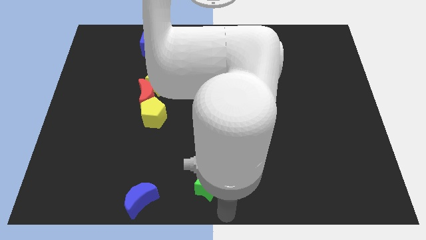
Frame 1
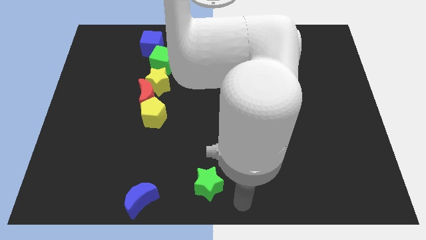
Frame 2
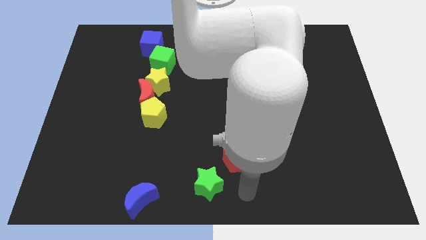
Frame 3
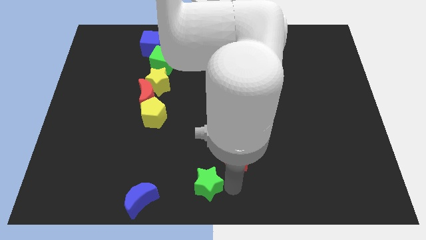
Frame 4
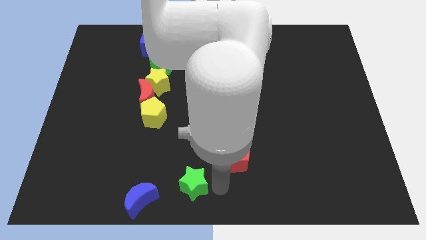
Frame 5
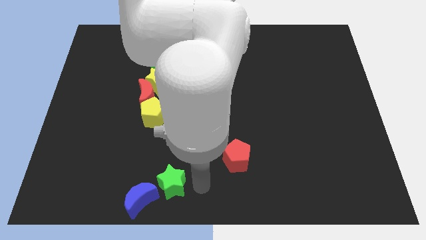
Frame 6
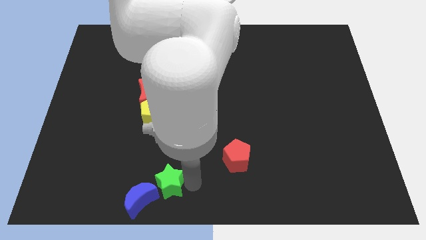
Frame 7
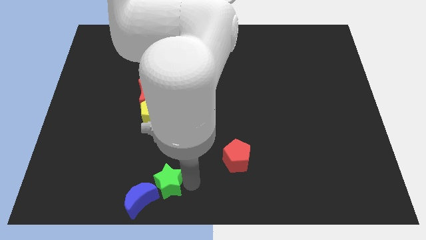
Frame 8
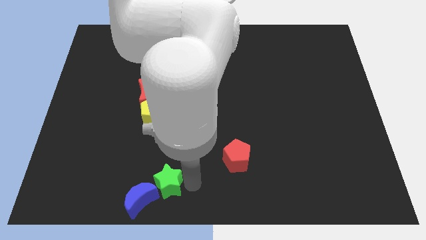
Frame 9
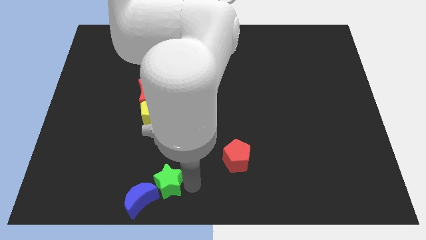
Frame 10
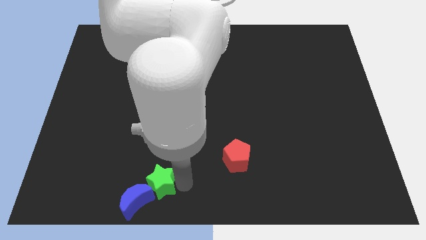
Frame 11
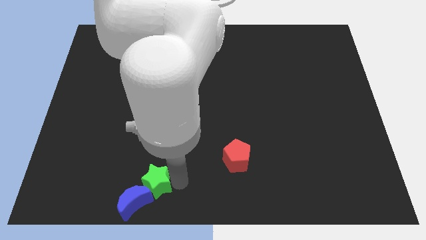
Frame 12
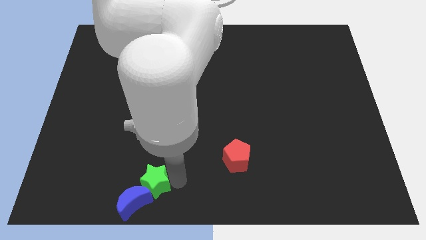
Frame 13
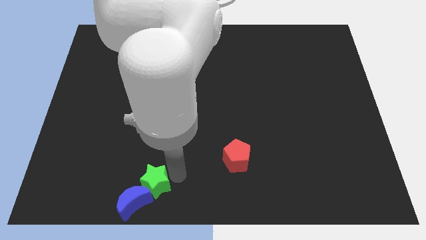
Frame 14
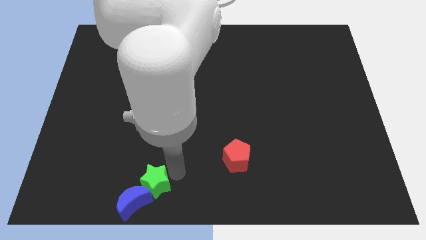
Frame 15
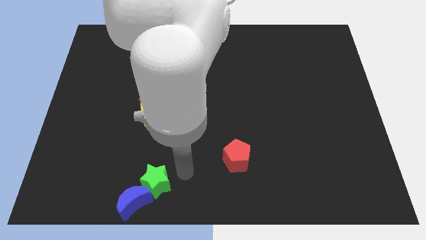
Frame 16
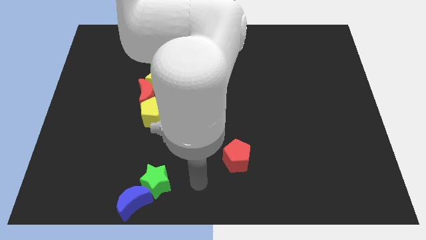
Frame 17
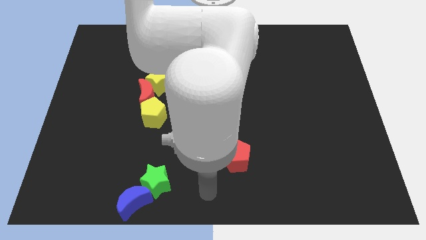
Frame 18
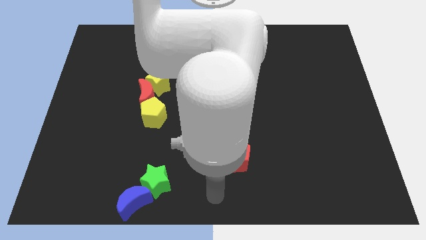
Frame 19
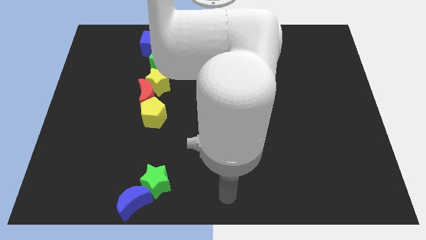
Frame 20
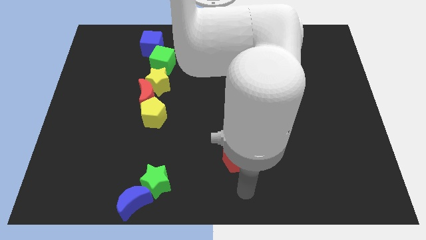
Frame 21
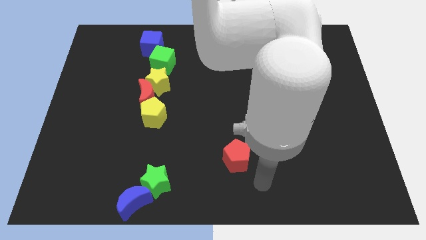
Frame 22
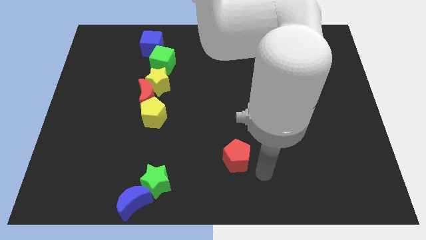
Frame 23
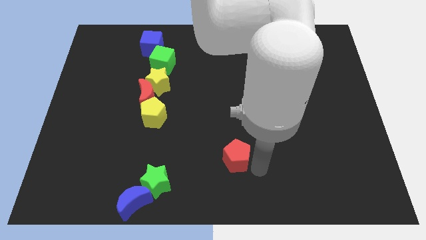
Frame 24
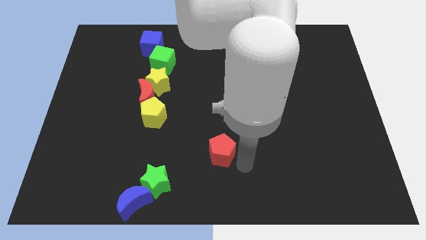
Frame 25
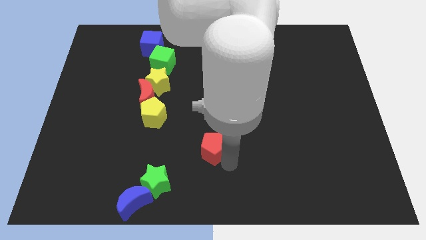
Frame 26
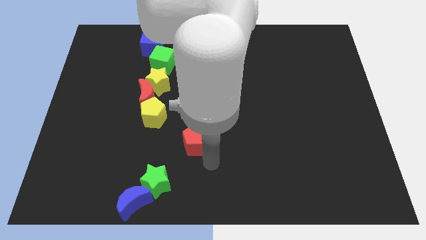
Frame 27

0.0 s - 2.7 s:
place the green star diagonal up right side of the blue moon

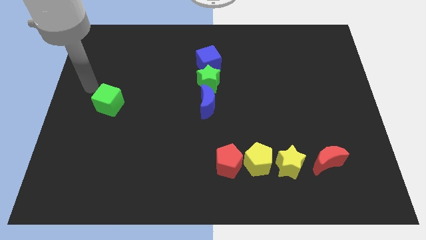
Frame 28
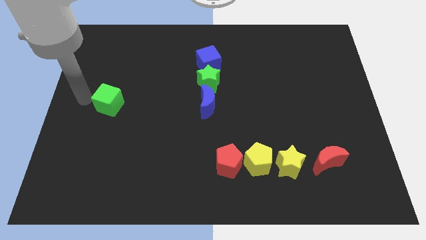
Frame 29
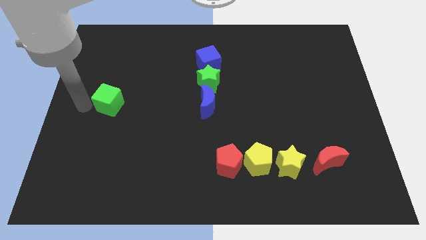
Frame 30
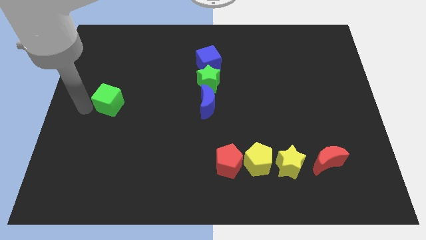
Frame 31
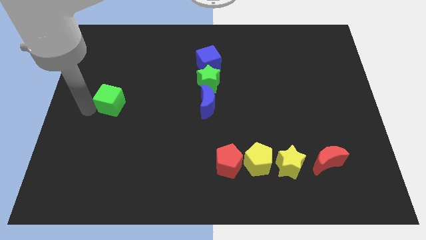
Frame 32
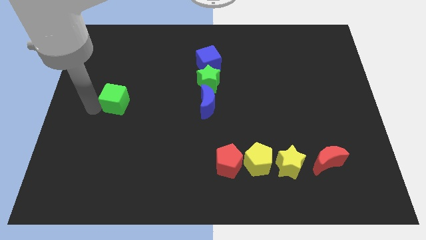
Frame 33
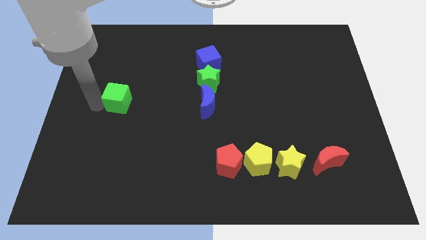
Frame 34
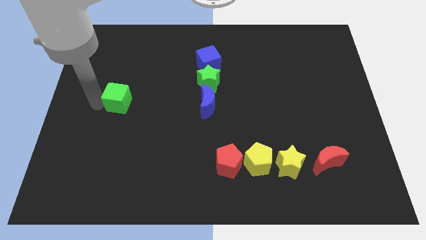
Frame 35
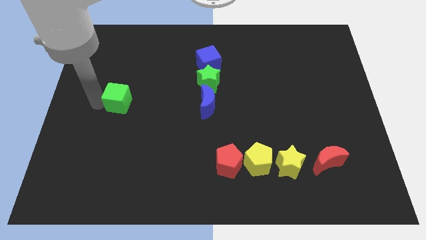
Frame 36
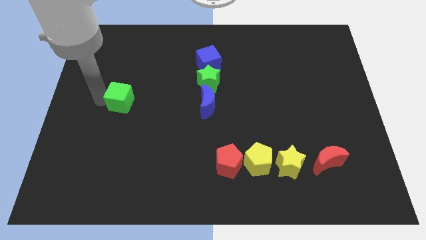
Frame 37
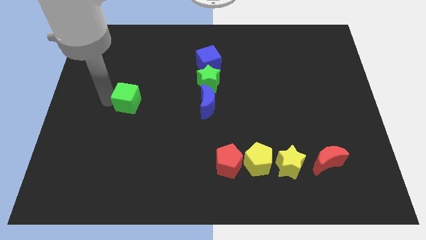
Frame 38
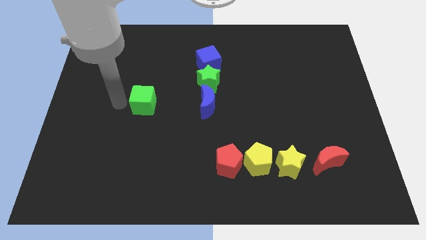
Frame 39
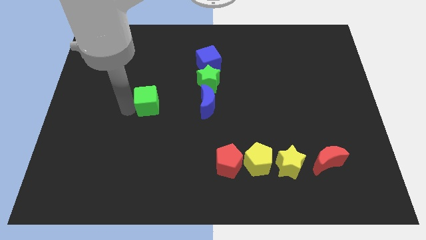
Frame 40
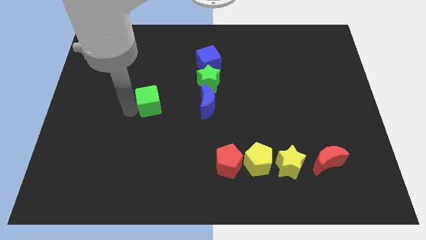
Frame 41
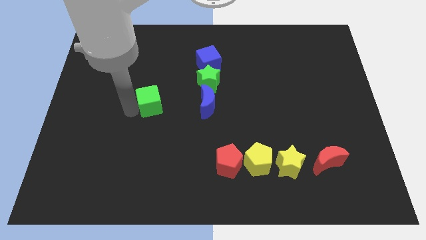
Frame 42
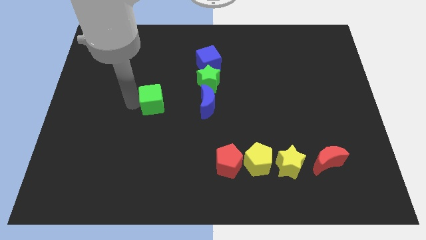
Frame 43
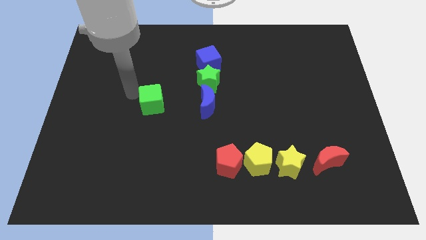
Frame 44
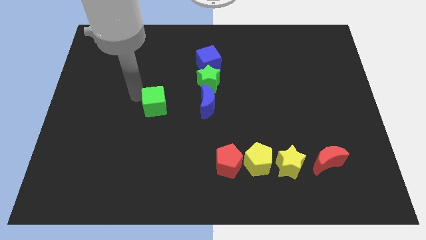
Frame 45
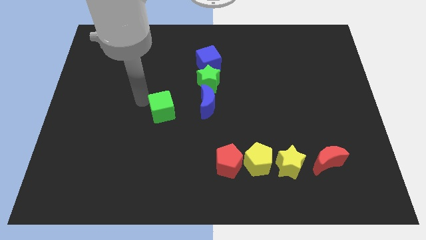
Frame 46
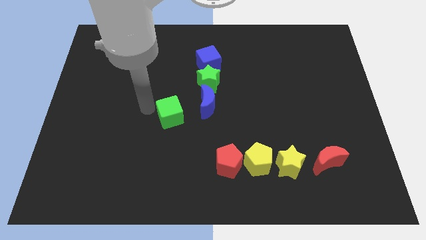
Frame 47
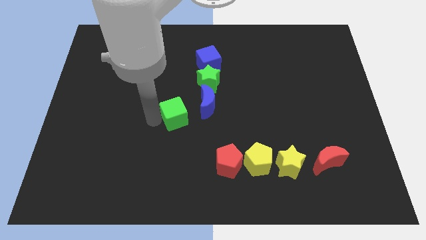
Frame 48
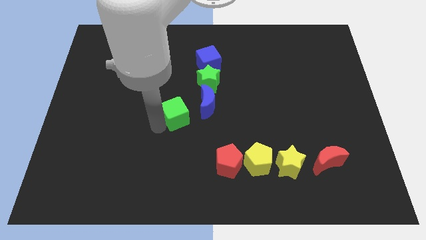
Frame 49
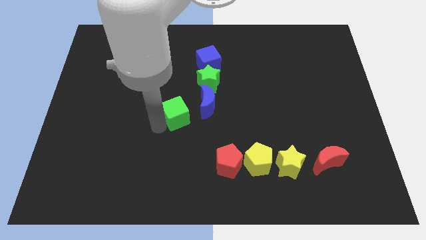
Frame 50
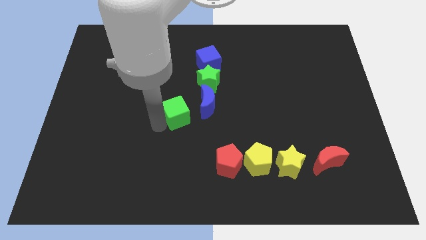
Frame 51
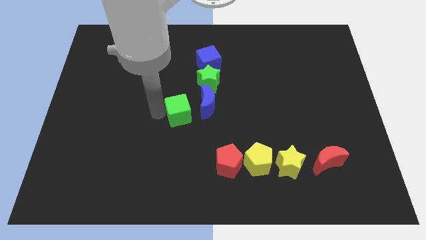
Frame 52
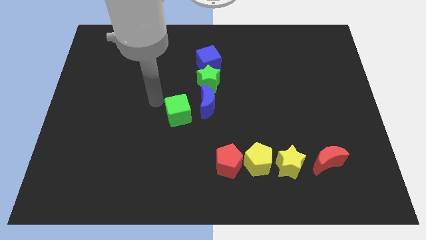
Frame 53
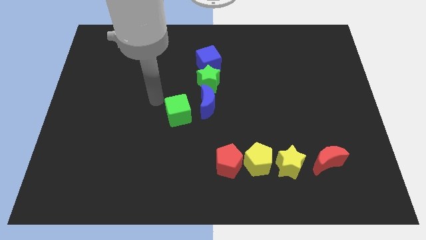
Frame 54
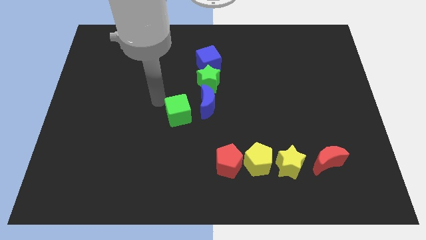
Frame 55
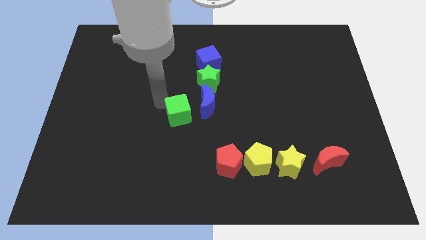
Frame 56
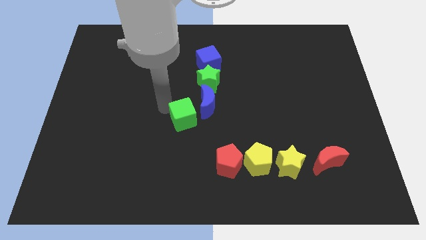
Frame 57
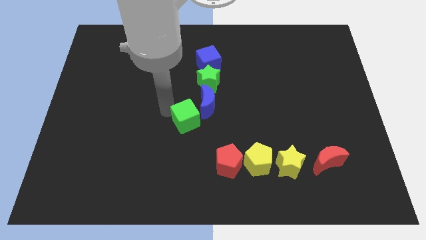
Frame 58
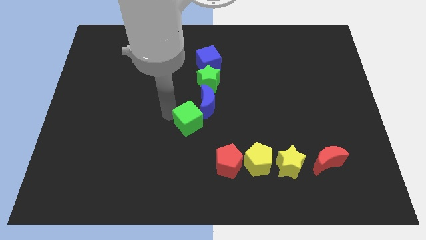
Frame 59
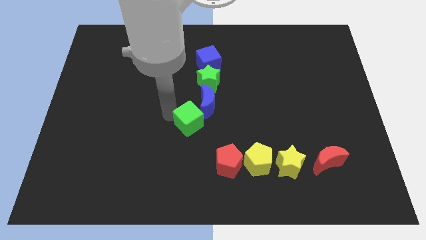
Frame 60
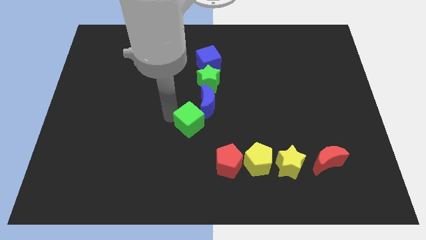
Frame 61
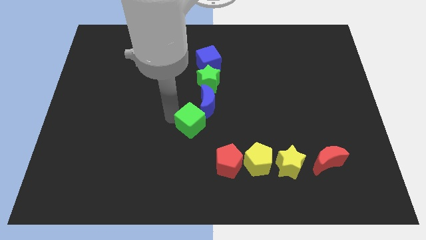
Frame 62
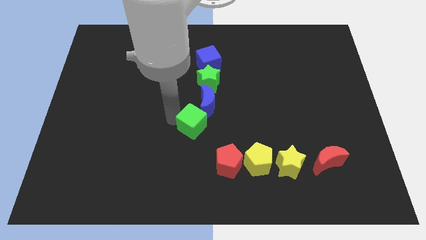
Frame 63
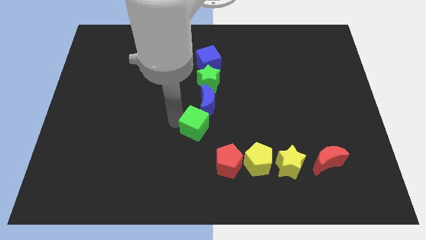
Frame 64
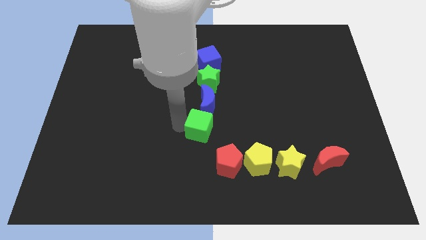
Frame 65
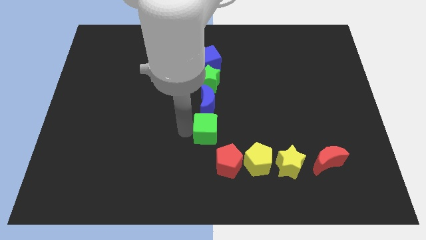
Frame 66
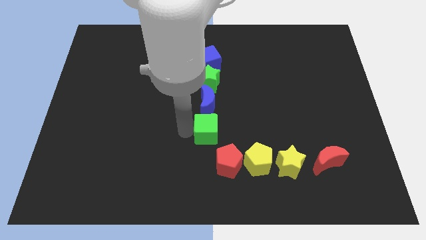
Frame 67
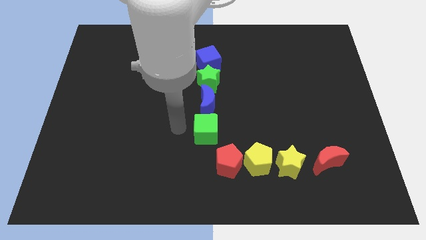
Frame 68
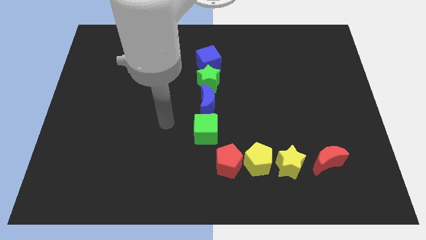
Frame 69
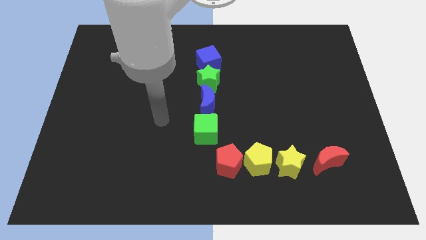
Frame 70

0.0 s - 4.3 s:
push the green cube to the bottomof the blue crescent

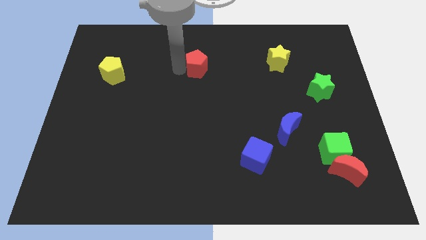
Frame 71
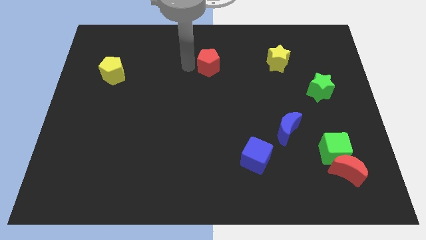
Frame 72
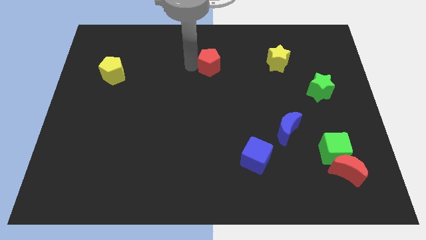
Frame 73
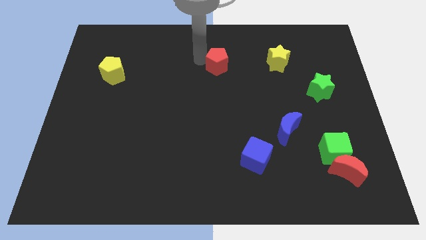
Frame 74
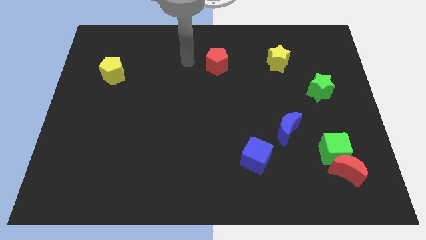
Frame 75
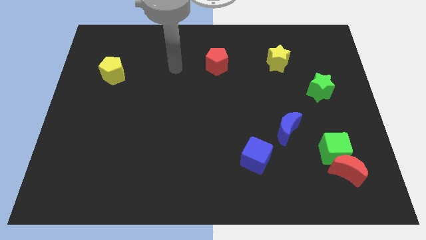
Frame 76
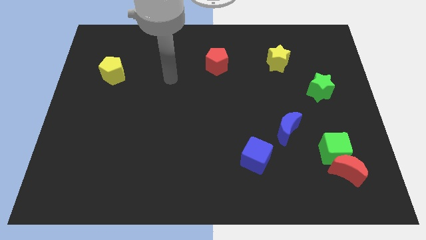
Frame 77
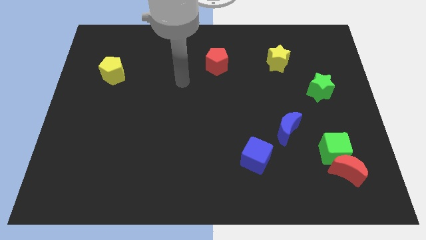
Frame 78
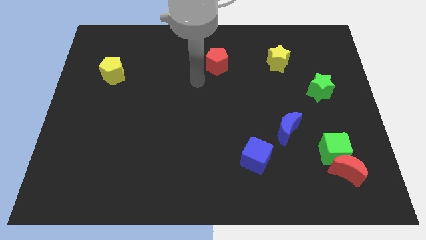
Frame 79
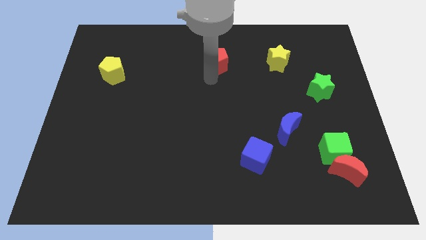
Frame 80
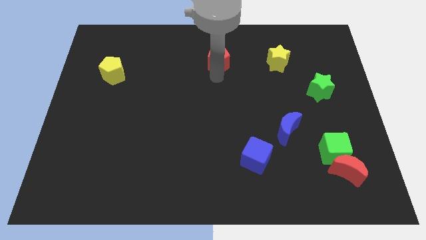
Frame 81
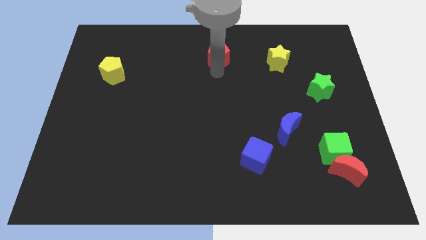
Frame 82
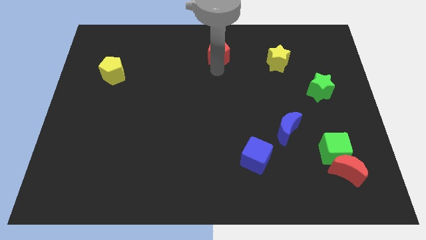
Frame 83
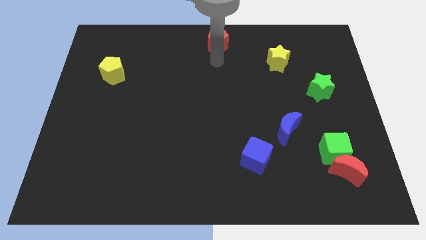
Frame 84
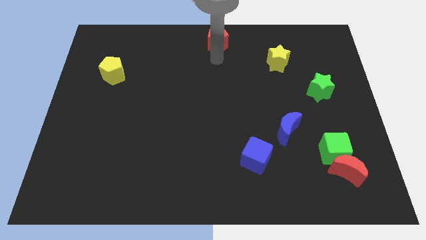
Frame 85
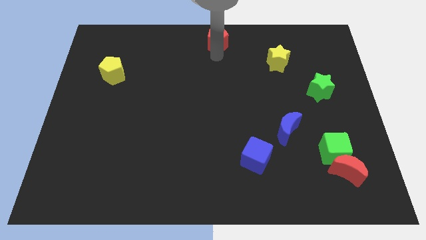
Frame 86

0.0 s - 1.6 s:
move red pentagon to the top center of the board

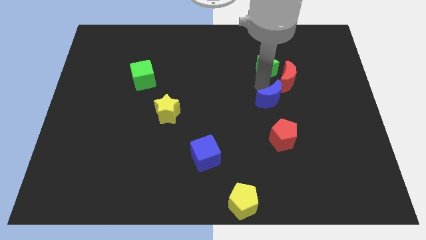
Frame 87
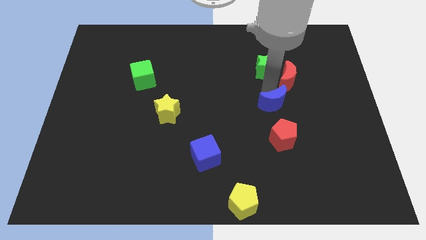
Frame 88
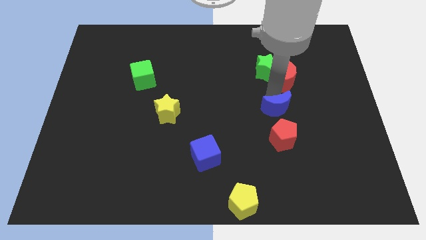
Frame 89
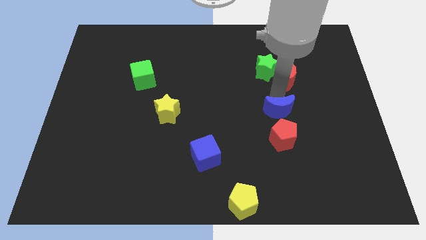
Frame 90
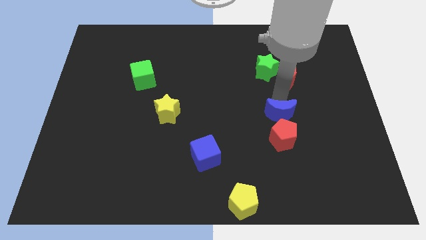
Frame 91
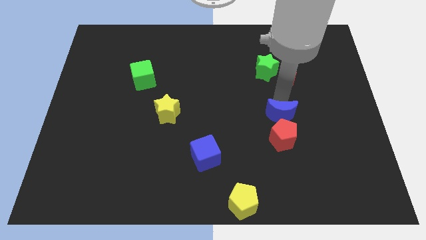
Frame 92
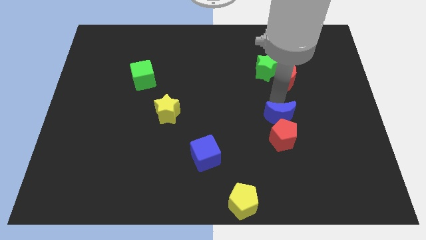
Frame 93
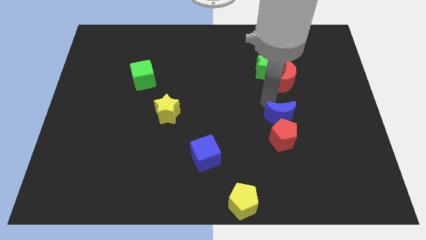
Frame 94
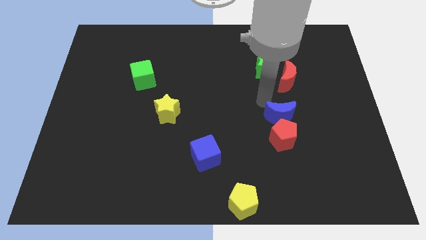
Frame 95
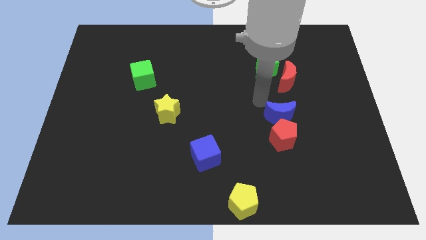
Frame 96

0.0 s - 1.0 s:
place the blue crescent on top of the red pentagon
